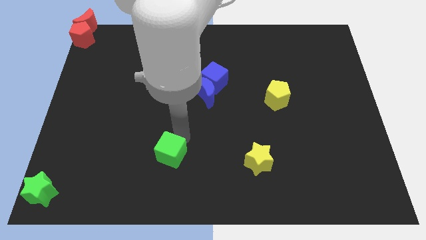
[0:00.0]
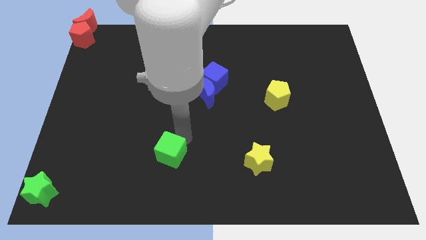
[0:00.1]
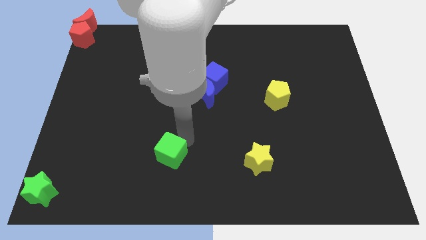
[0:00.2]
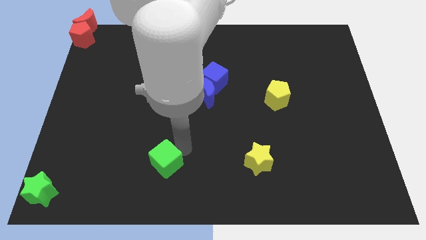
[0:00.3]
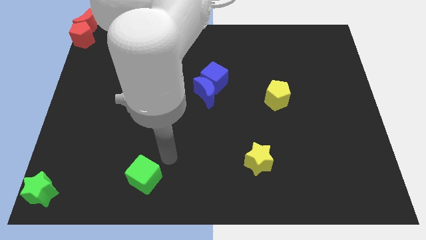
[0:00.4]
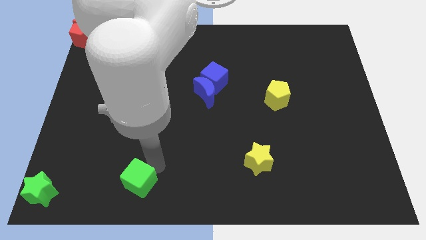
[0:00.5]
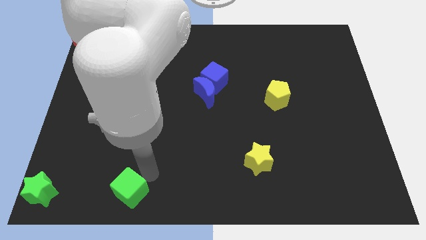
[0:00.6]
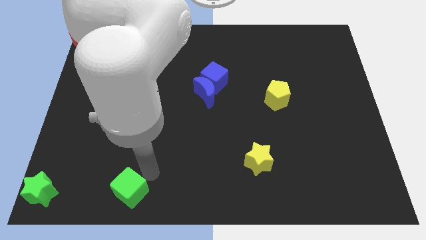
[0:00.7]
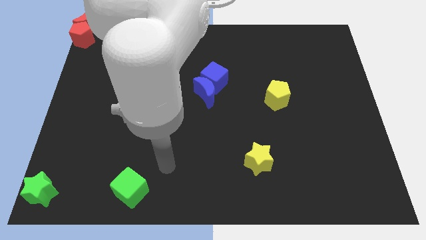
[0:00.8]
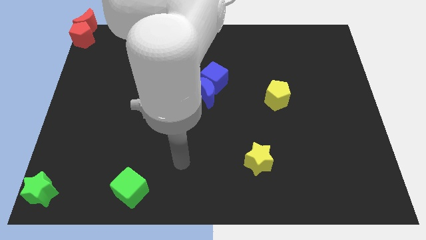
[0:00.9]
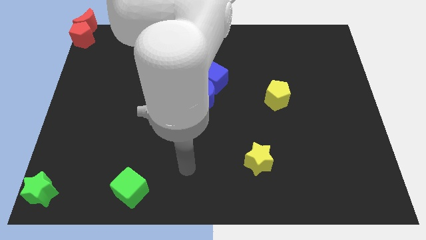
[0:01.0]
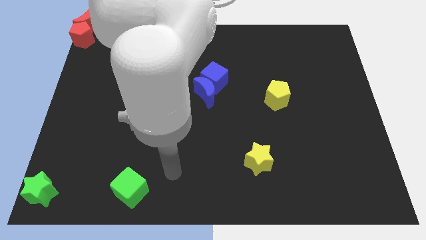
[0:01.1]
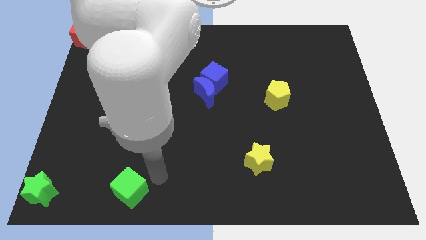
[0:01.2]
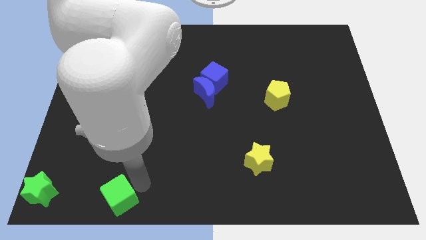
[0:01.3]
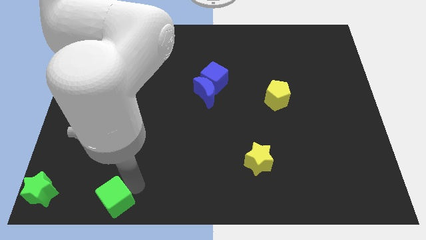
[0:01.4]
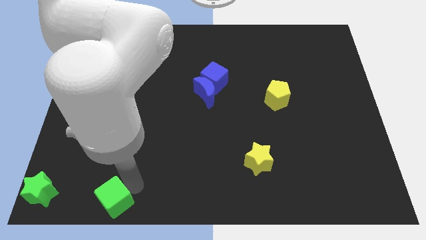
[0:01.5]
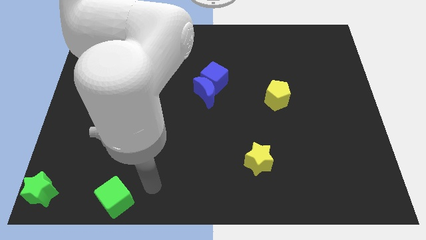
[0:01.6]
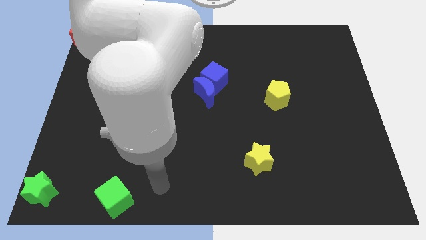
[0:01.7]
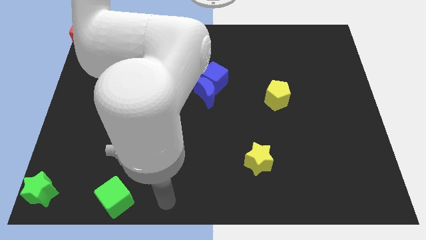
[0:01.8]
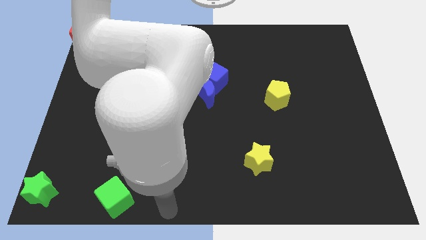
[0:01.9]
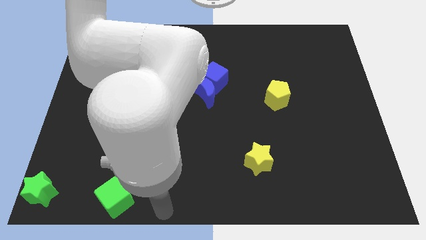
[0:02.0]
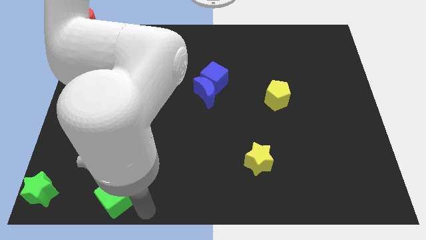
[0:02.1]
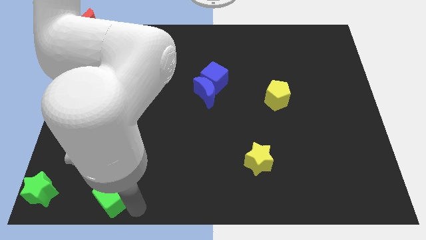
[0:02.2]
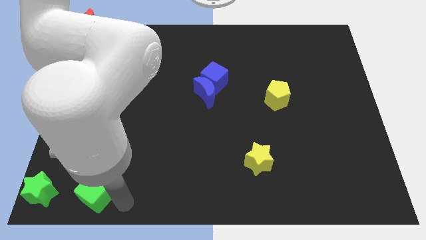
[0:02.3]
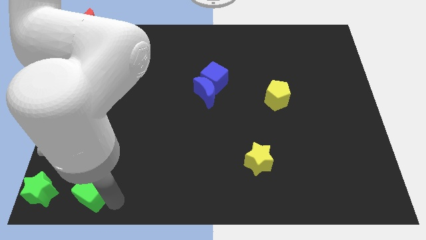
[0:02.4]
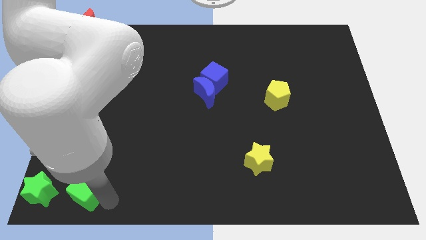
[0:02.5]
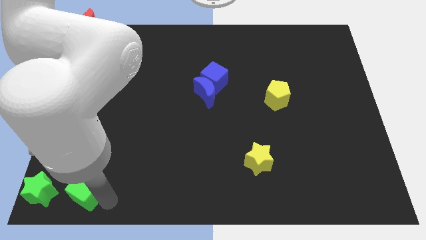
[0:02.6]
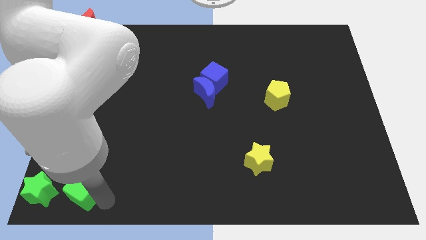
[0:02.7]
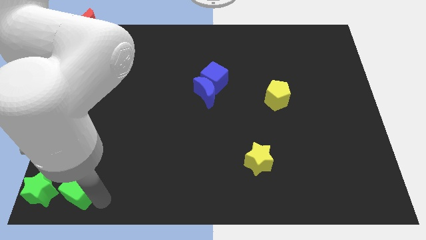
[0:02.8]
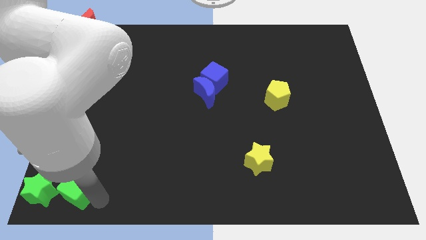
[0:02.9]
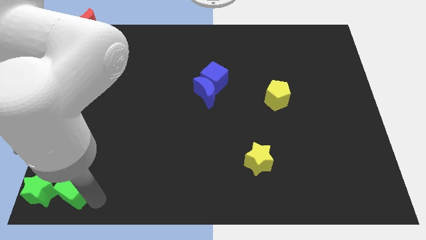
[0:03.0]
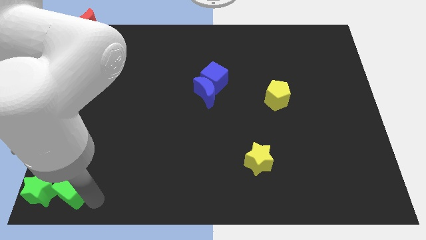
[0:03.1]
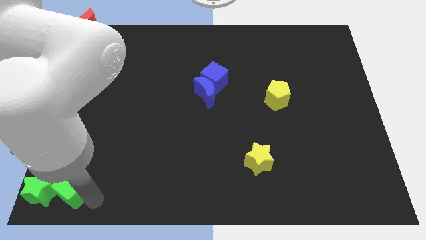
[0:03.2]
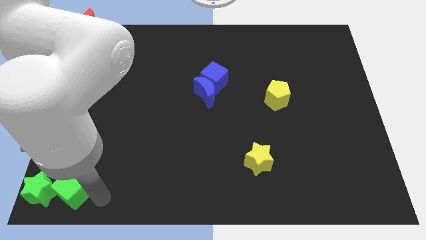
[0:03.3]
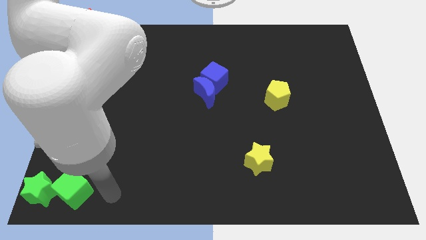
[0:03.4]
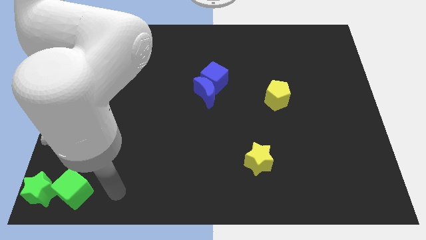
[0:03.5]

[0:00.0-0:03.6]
push the green cube close to the right side of the green star

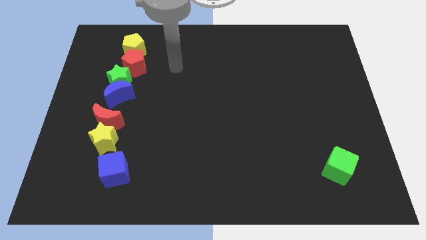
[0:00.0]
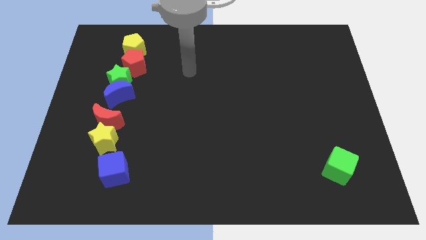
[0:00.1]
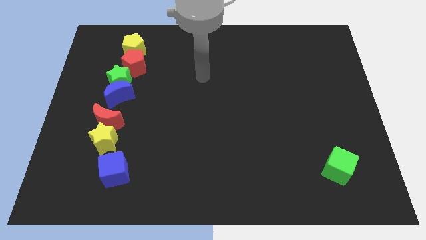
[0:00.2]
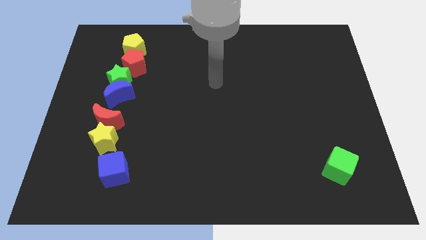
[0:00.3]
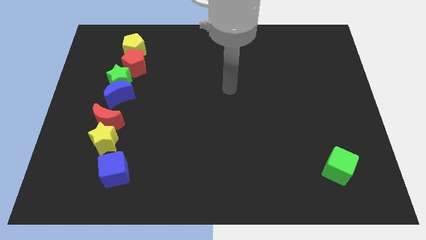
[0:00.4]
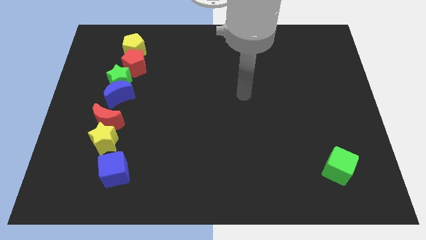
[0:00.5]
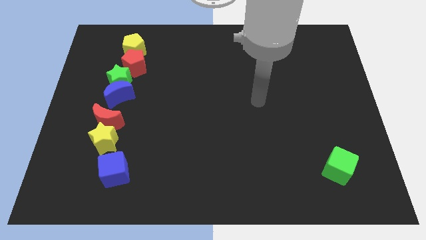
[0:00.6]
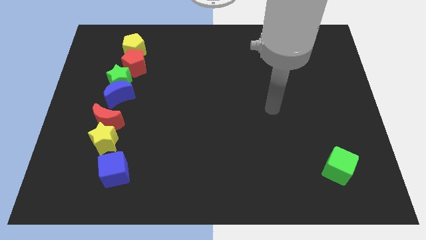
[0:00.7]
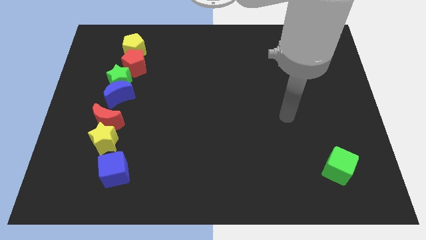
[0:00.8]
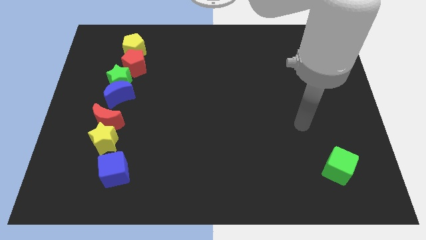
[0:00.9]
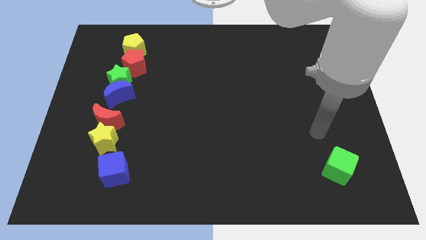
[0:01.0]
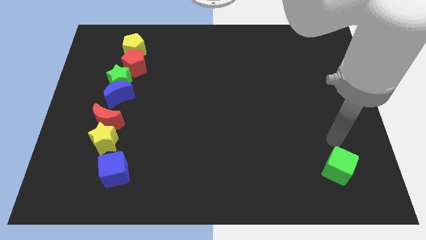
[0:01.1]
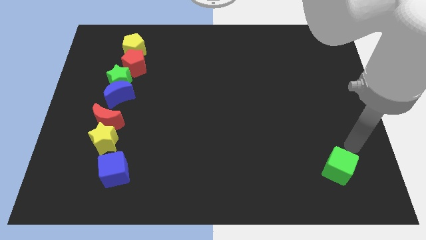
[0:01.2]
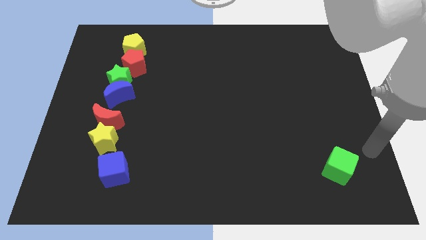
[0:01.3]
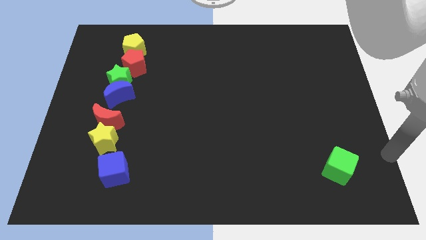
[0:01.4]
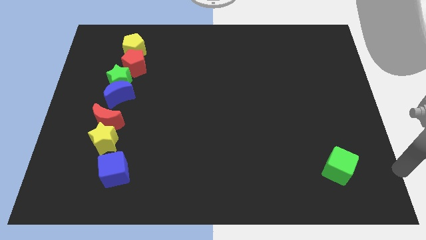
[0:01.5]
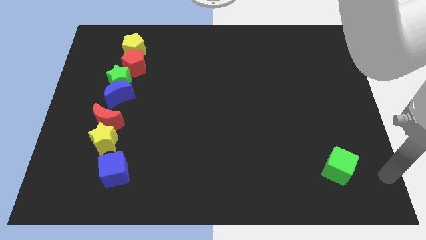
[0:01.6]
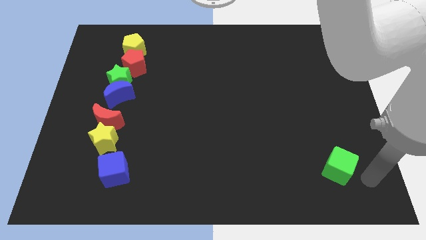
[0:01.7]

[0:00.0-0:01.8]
move your arm towards the green cube

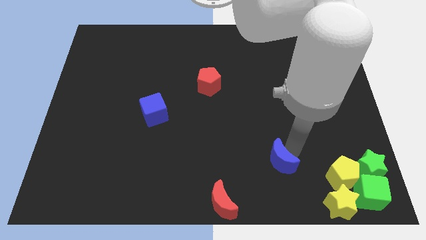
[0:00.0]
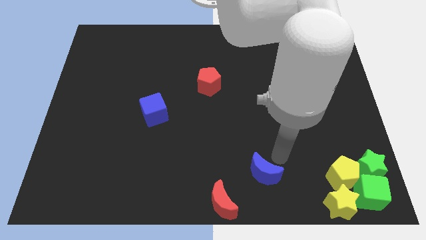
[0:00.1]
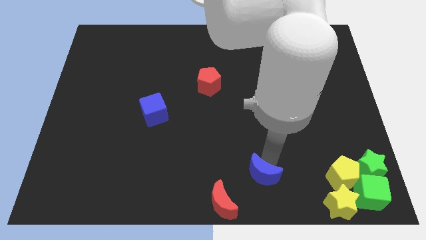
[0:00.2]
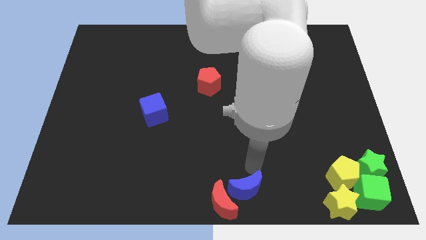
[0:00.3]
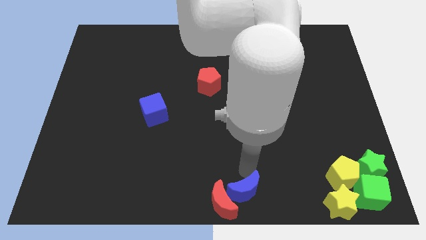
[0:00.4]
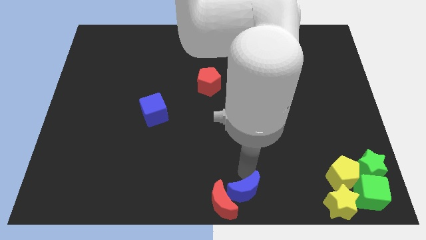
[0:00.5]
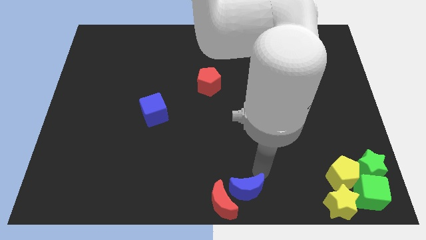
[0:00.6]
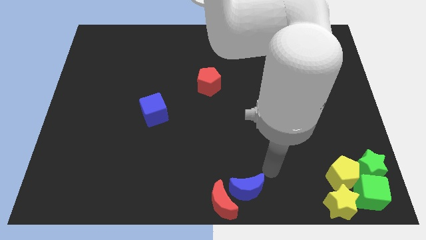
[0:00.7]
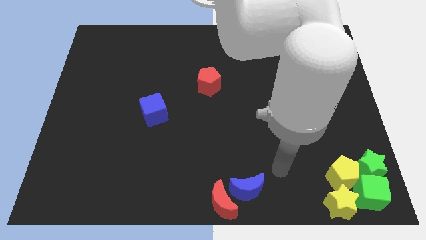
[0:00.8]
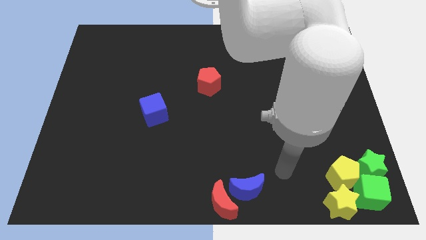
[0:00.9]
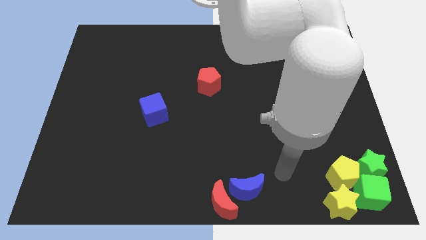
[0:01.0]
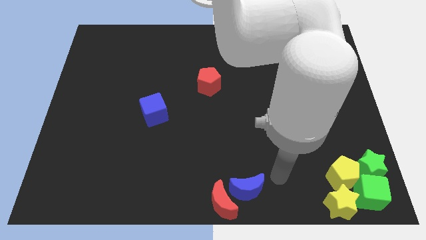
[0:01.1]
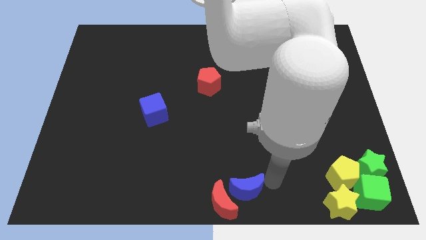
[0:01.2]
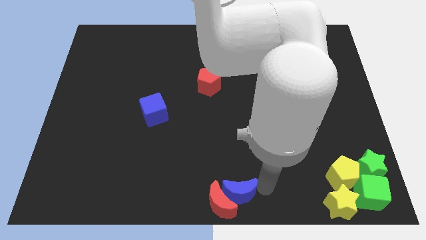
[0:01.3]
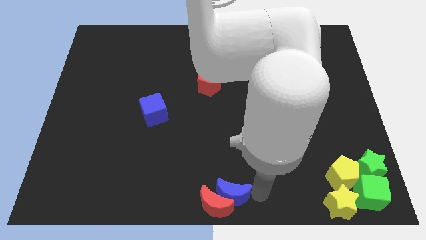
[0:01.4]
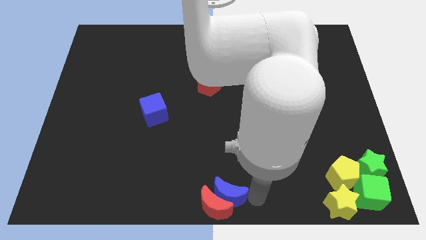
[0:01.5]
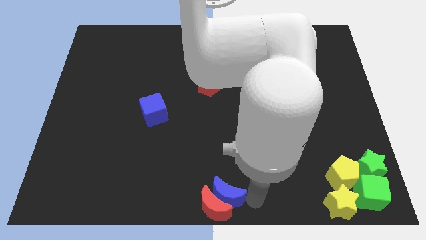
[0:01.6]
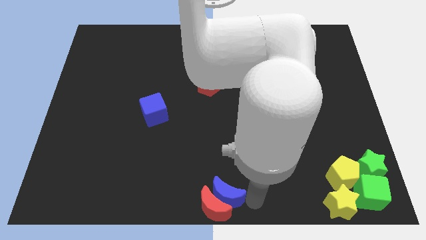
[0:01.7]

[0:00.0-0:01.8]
move the blue crescent into the red crescent

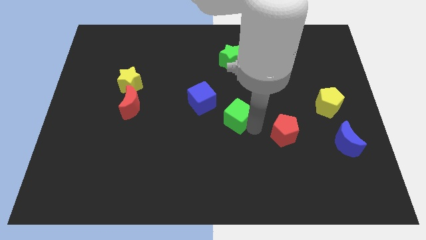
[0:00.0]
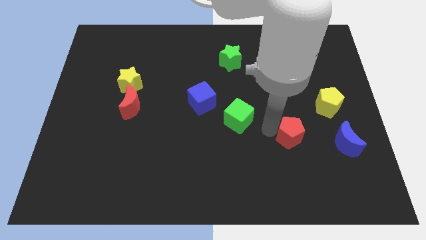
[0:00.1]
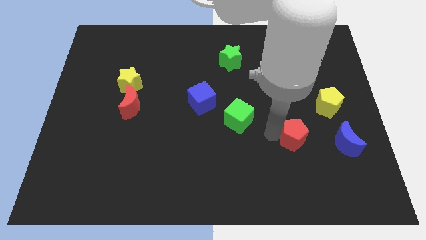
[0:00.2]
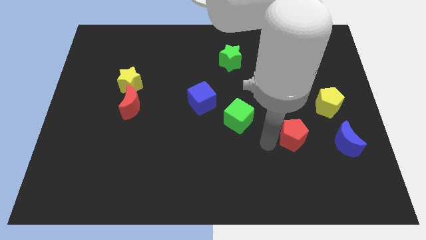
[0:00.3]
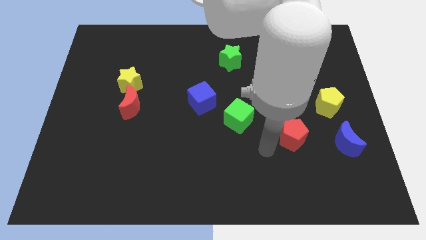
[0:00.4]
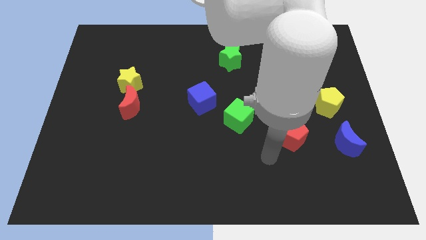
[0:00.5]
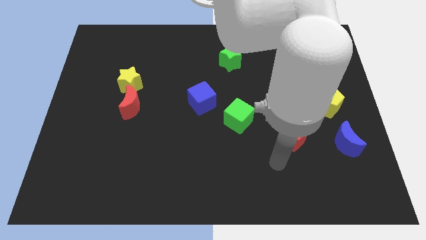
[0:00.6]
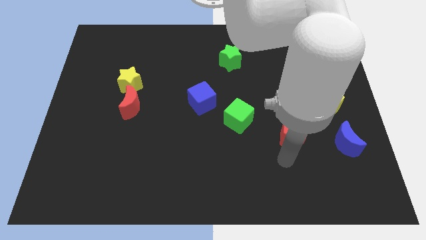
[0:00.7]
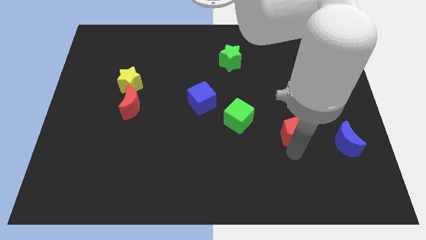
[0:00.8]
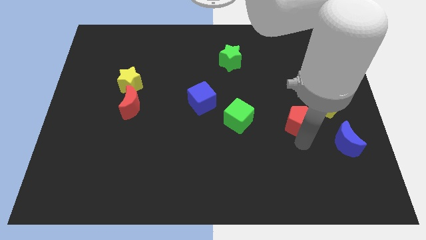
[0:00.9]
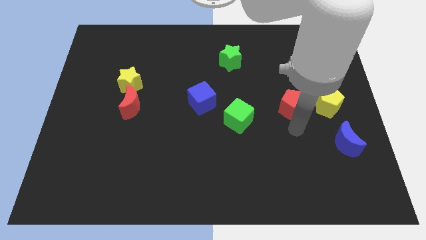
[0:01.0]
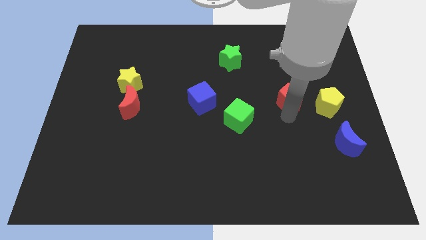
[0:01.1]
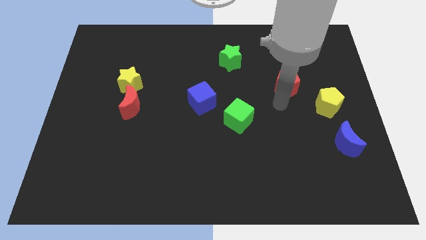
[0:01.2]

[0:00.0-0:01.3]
put the red pentagon at the top left of the yellow pentagon

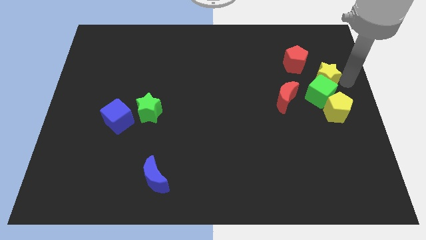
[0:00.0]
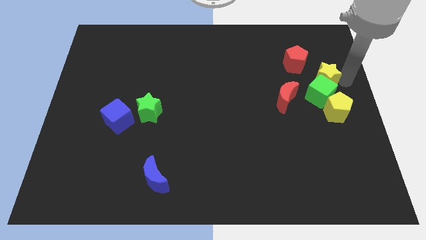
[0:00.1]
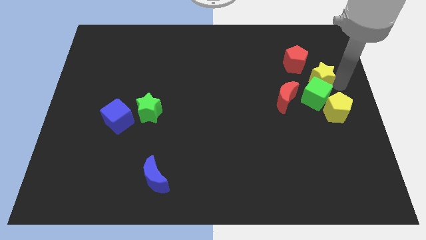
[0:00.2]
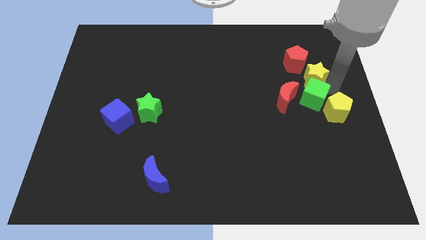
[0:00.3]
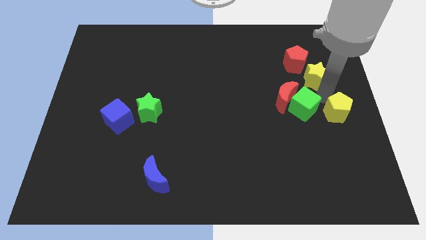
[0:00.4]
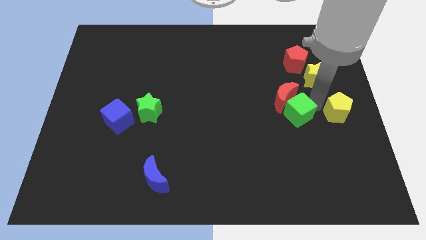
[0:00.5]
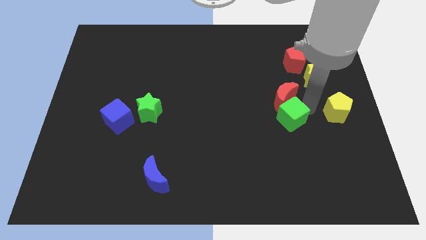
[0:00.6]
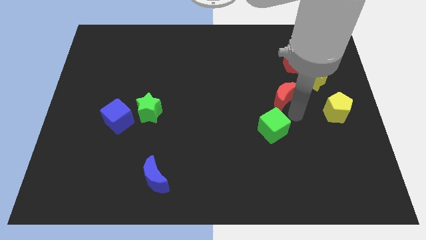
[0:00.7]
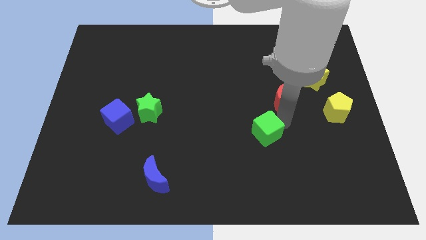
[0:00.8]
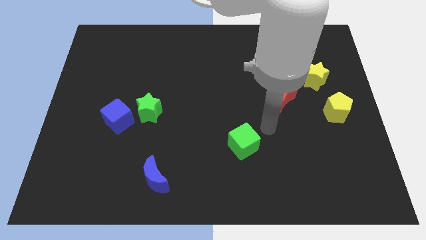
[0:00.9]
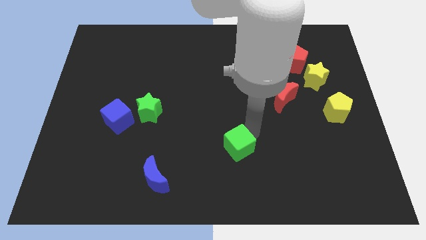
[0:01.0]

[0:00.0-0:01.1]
separate the green cube from the yellow blocks
